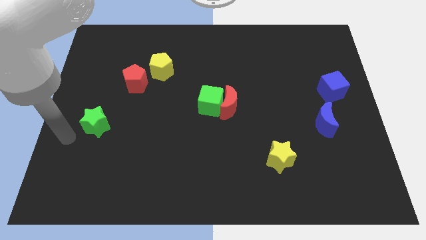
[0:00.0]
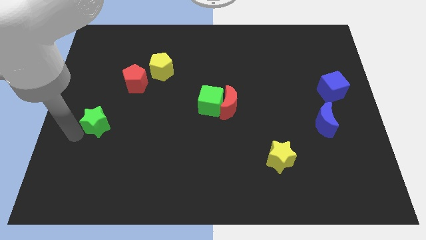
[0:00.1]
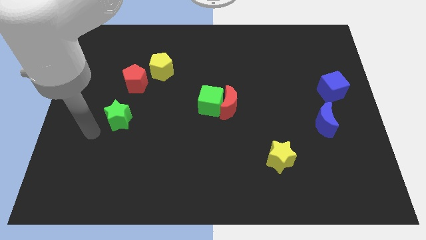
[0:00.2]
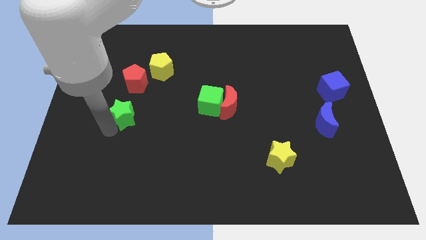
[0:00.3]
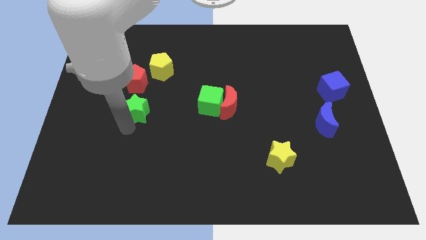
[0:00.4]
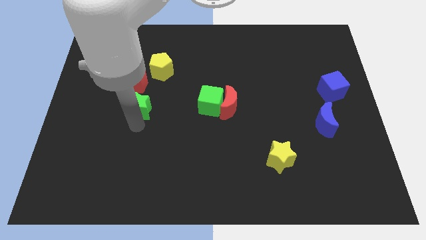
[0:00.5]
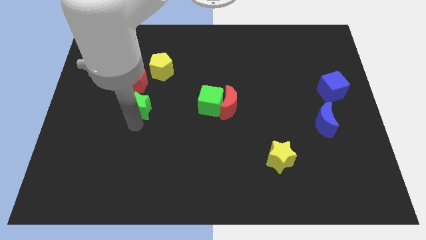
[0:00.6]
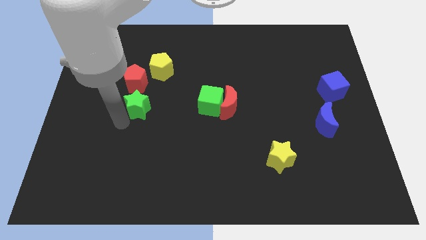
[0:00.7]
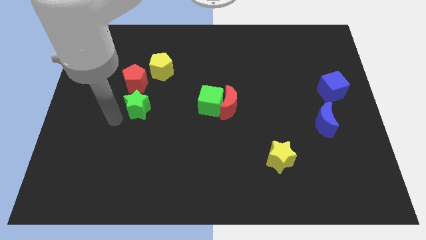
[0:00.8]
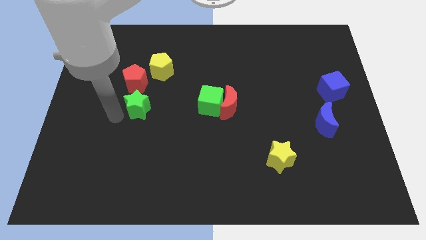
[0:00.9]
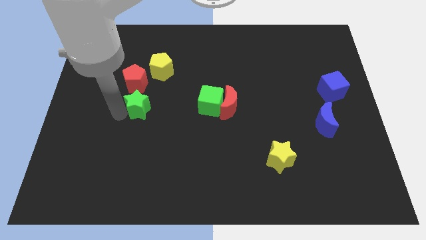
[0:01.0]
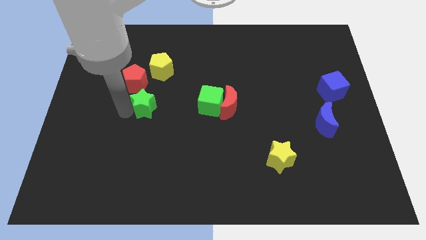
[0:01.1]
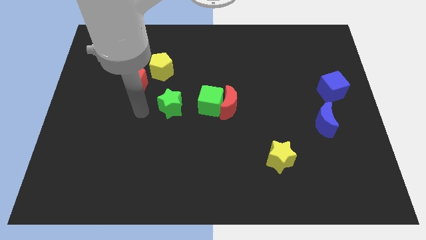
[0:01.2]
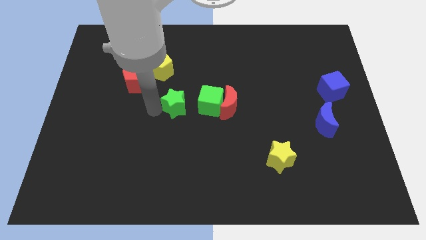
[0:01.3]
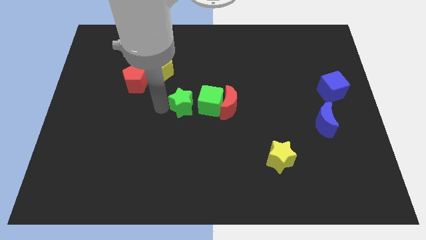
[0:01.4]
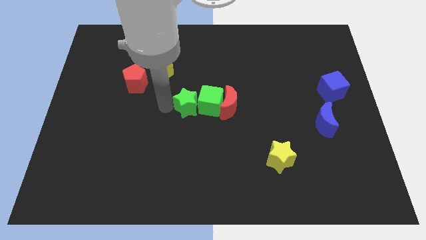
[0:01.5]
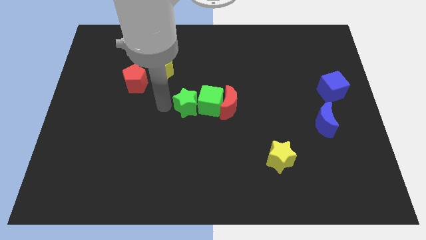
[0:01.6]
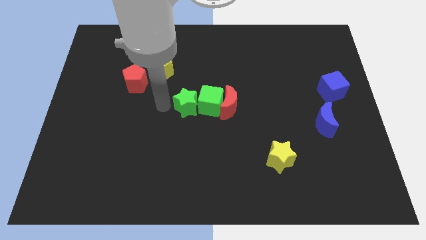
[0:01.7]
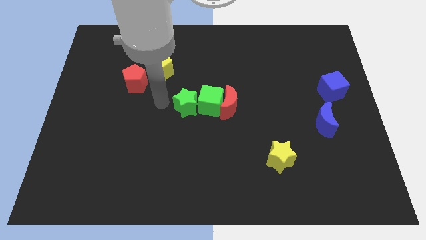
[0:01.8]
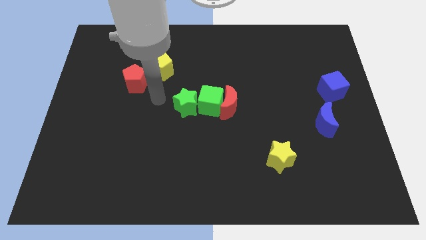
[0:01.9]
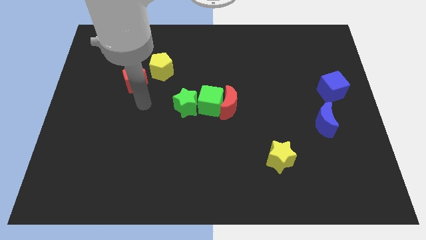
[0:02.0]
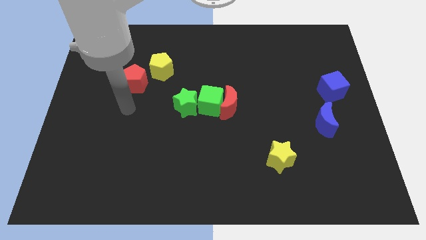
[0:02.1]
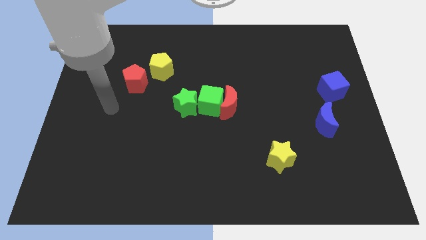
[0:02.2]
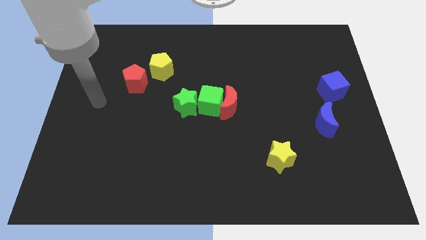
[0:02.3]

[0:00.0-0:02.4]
move the green star to the left side of the green cube

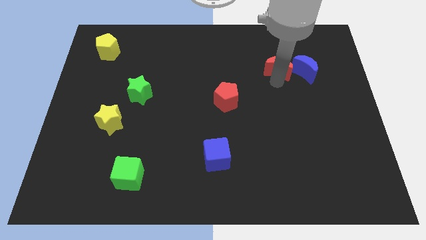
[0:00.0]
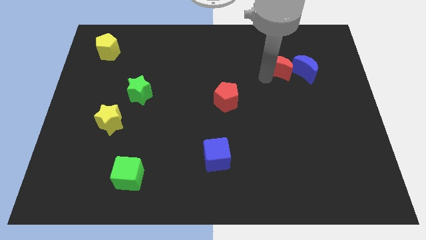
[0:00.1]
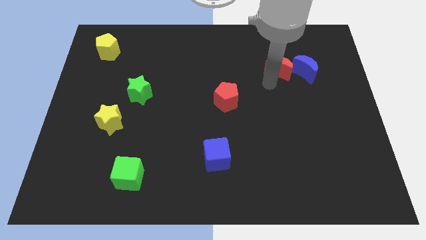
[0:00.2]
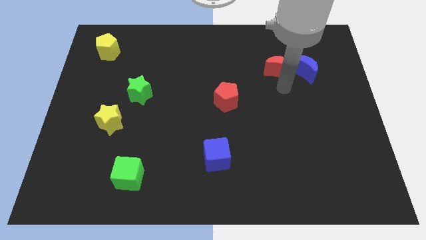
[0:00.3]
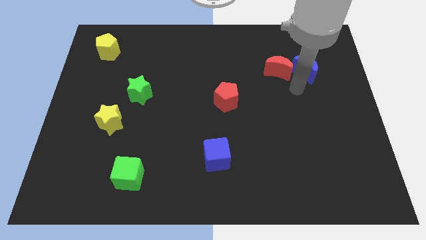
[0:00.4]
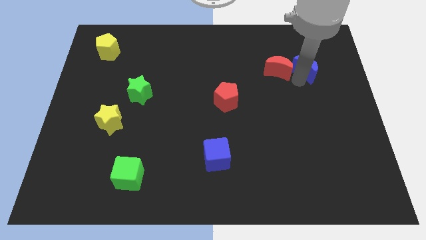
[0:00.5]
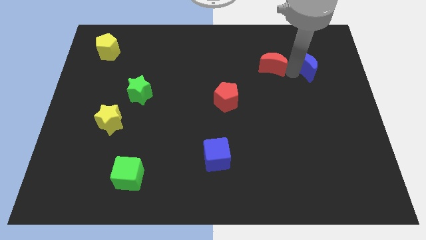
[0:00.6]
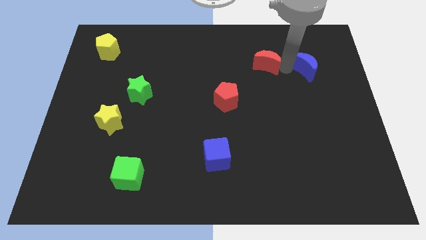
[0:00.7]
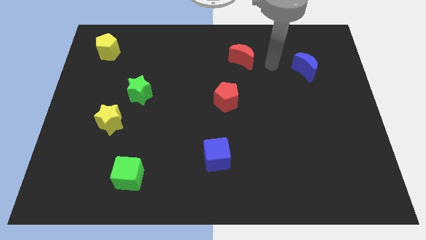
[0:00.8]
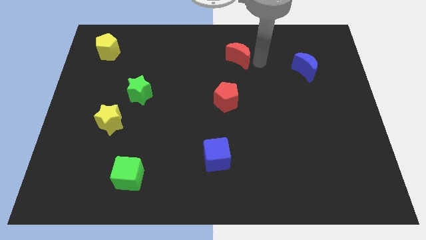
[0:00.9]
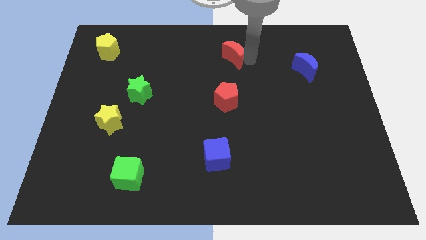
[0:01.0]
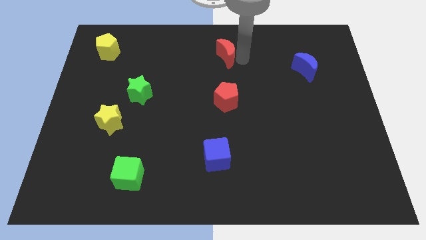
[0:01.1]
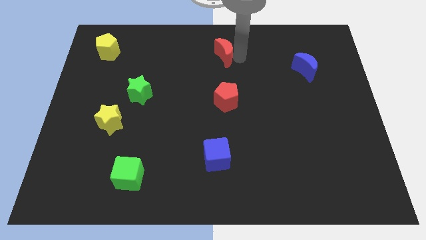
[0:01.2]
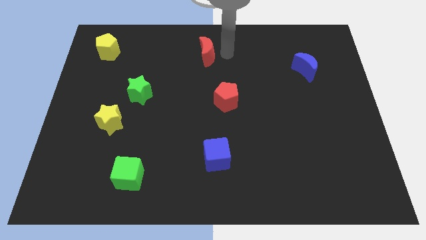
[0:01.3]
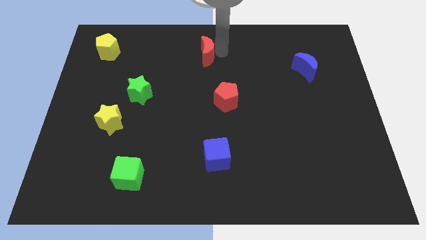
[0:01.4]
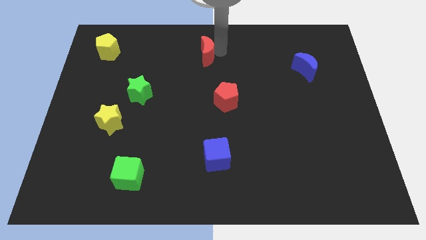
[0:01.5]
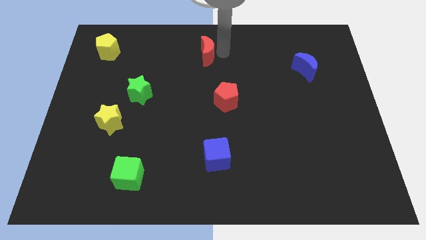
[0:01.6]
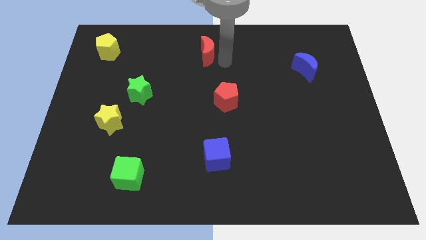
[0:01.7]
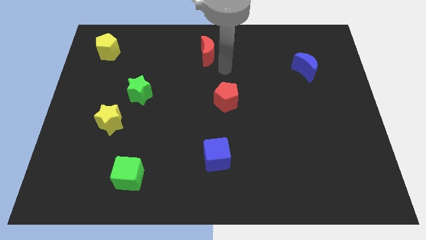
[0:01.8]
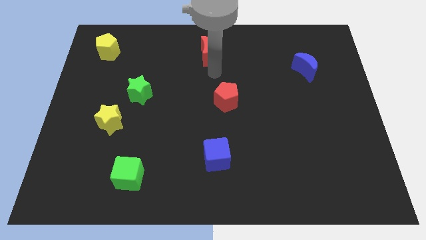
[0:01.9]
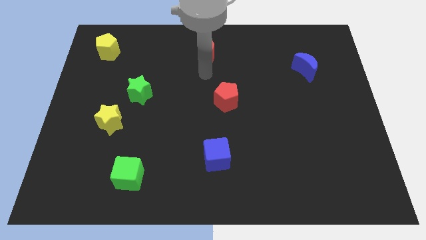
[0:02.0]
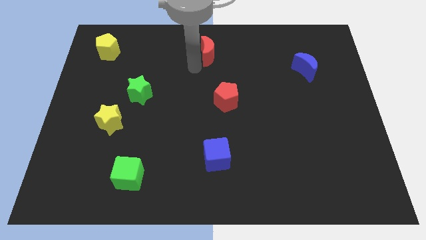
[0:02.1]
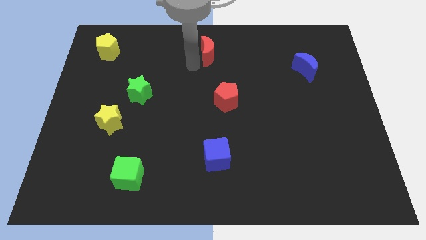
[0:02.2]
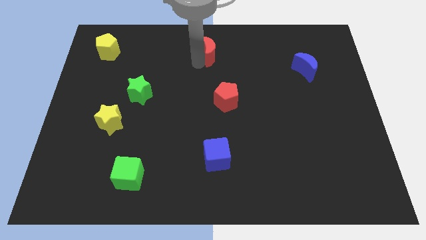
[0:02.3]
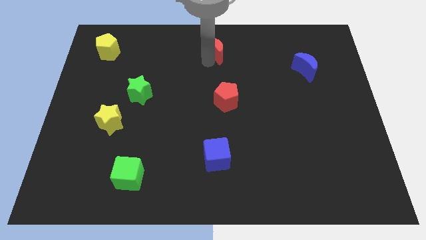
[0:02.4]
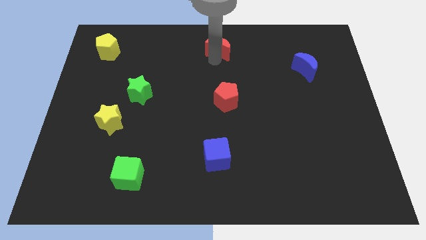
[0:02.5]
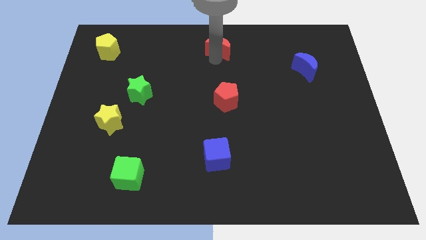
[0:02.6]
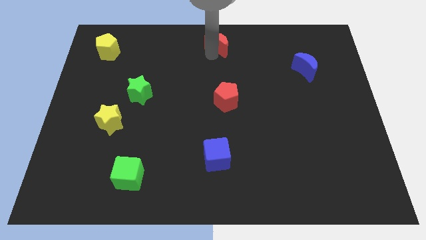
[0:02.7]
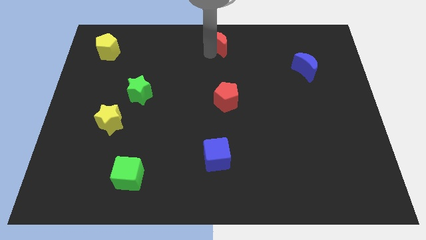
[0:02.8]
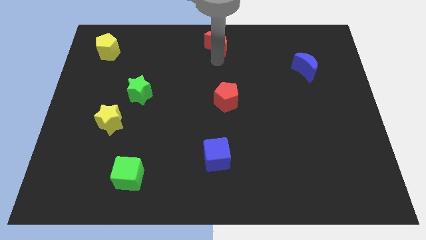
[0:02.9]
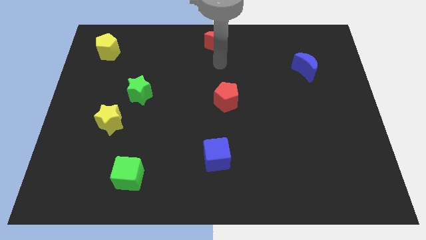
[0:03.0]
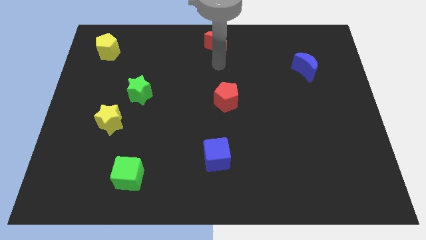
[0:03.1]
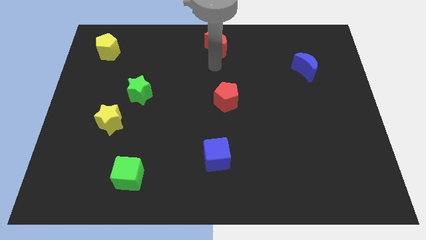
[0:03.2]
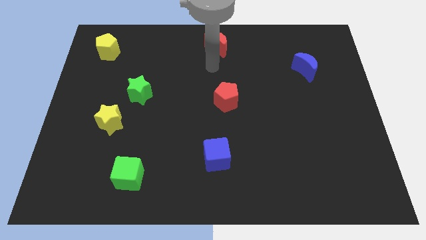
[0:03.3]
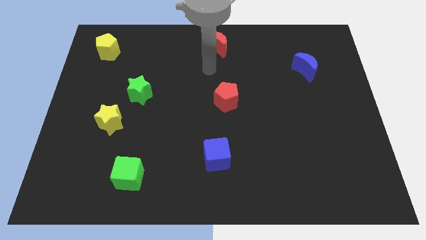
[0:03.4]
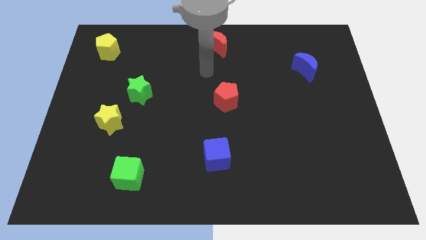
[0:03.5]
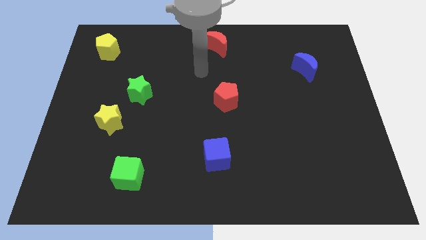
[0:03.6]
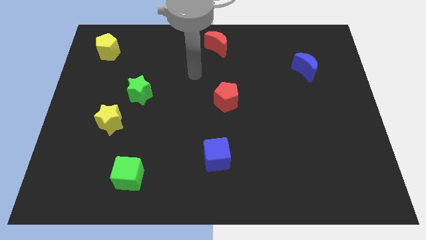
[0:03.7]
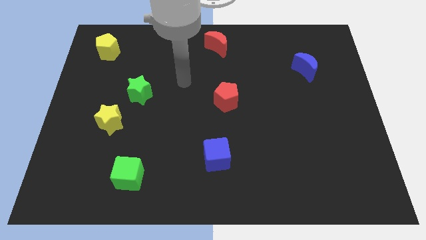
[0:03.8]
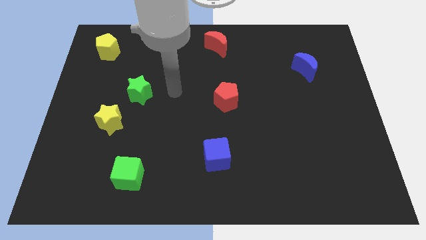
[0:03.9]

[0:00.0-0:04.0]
move the red crescent towards the top center of the board

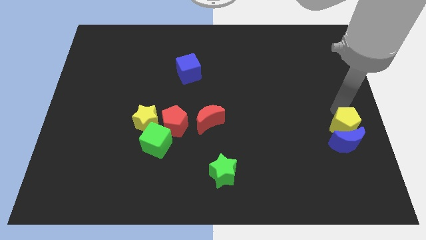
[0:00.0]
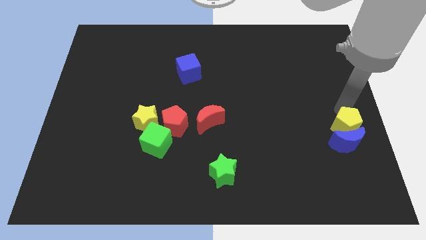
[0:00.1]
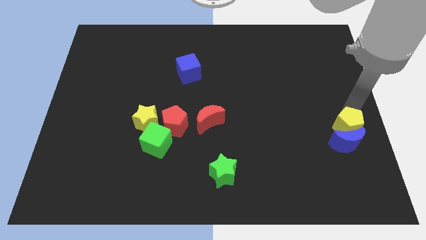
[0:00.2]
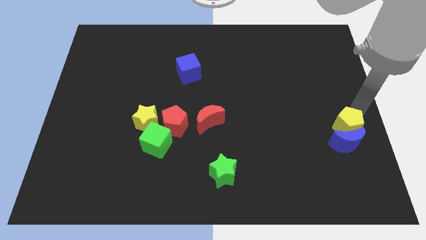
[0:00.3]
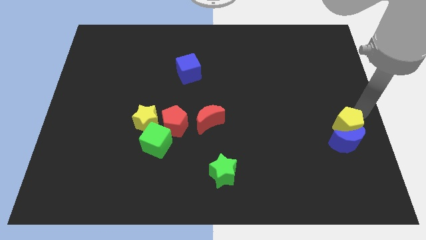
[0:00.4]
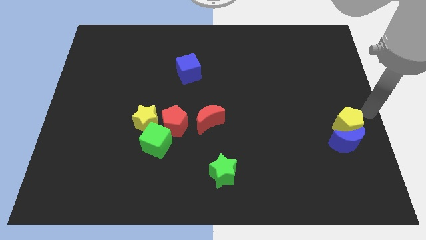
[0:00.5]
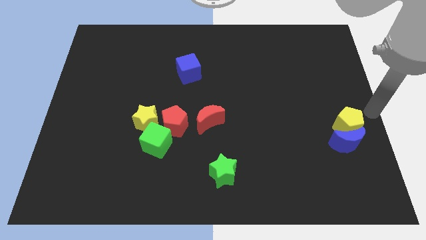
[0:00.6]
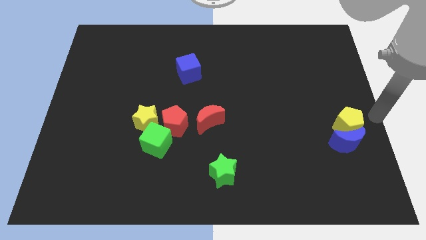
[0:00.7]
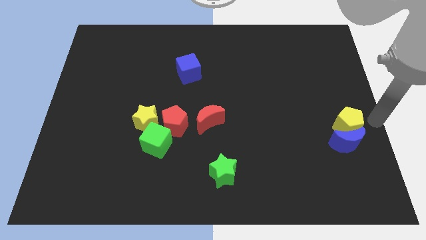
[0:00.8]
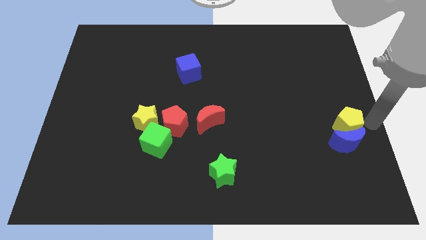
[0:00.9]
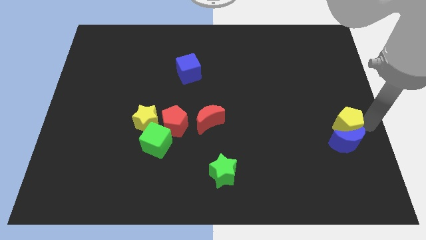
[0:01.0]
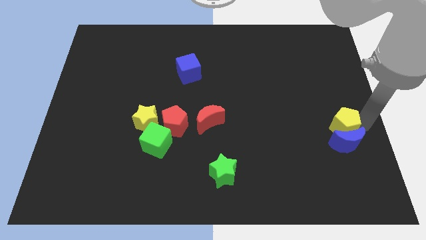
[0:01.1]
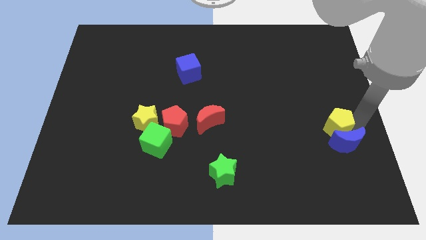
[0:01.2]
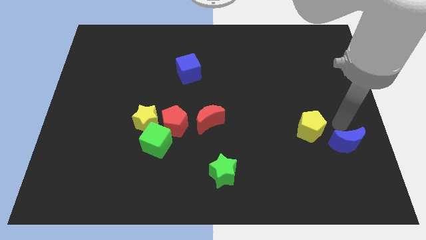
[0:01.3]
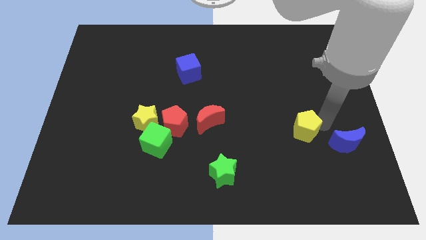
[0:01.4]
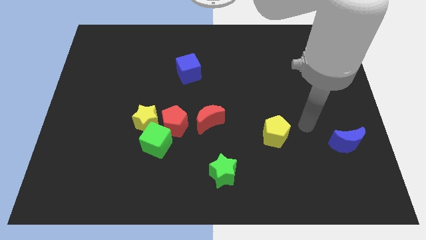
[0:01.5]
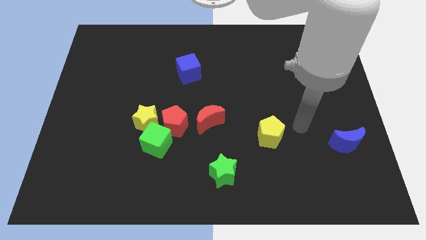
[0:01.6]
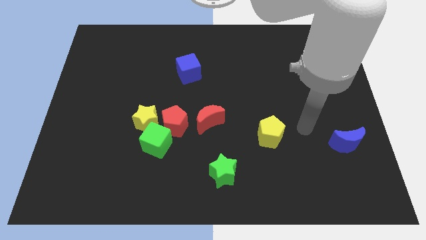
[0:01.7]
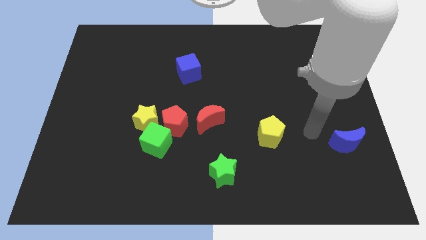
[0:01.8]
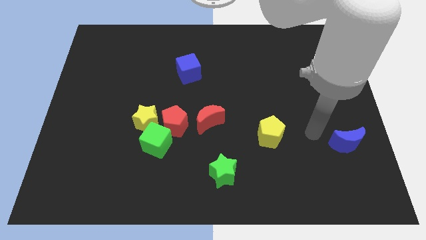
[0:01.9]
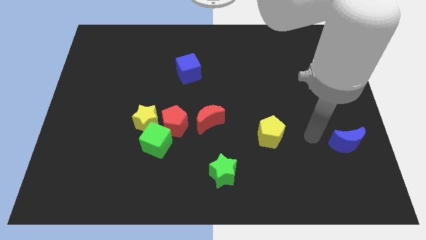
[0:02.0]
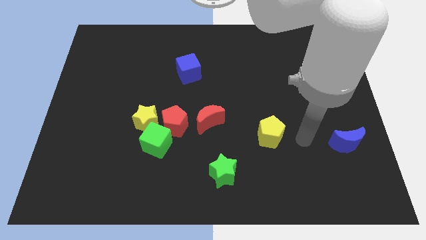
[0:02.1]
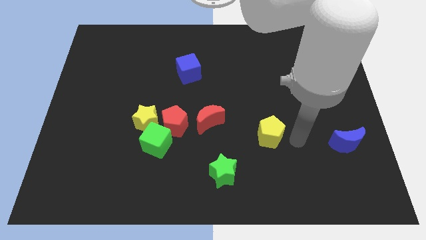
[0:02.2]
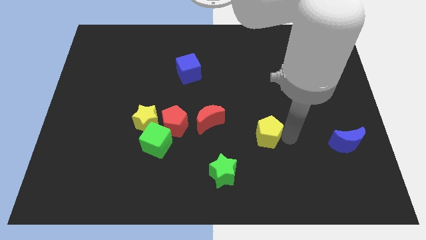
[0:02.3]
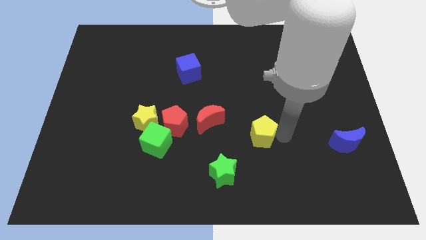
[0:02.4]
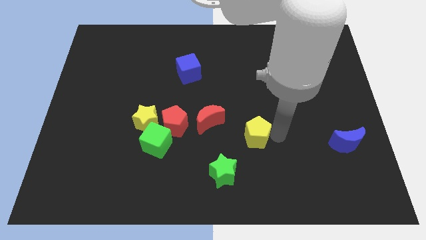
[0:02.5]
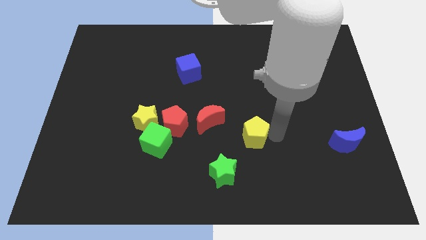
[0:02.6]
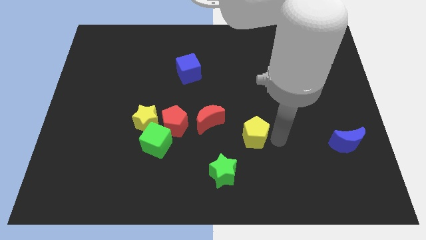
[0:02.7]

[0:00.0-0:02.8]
separate the yellow pentagon from the blue moon
